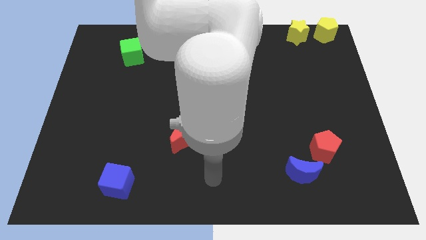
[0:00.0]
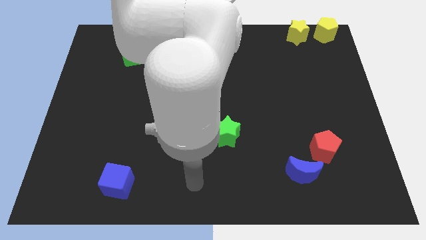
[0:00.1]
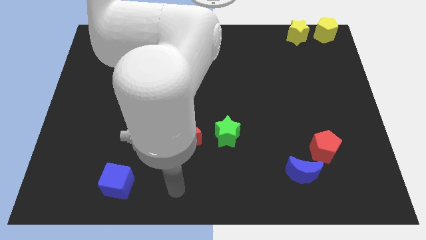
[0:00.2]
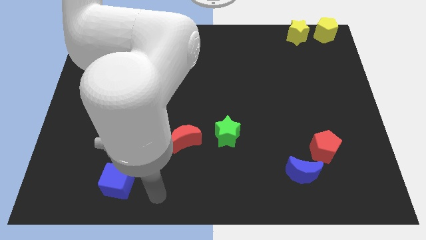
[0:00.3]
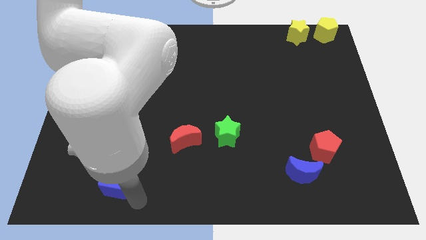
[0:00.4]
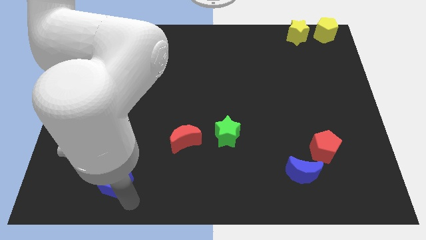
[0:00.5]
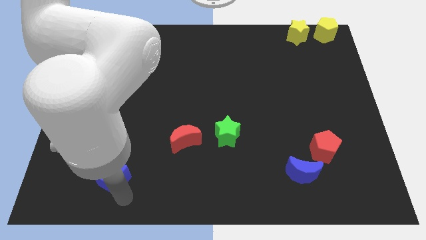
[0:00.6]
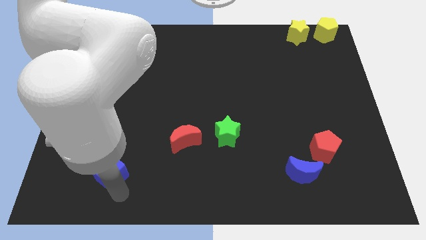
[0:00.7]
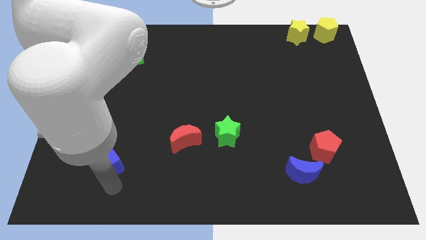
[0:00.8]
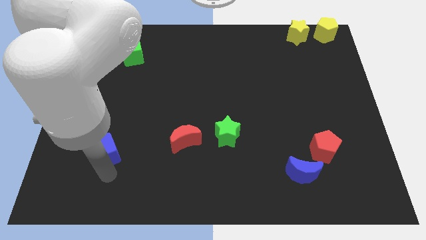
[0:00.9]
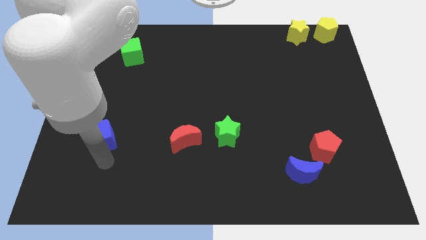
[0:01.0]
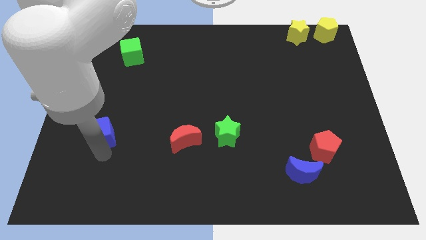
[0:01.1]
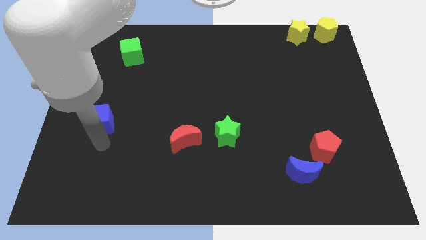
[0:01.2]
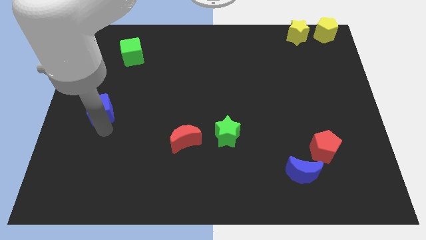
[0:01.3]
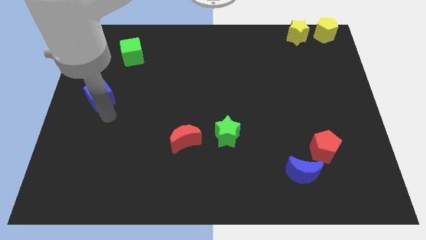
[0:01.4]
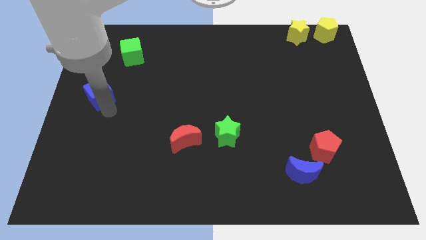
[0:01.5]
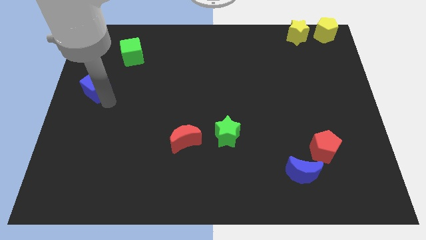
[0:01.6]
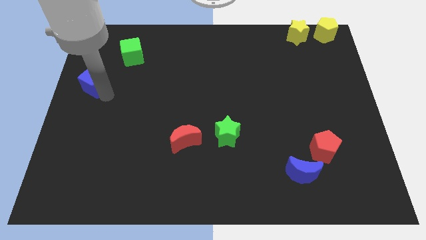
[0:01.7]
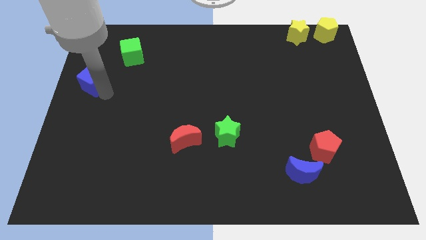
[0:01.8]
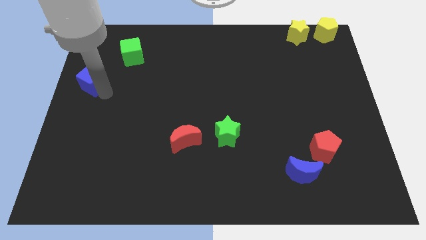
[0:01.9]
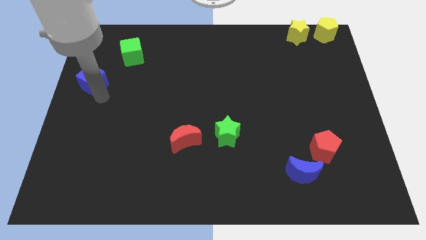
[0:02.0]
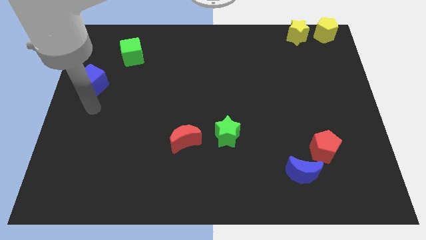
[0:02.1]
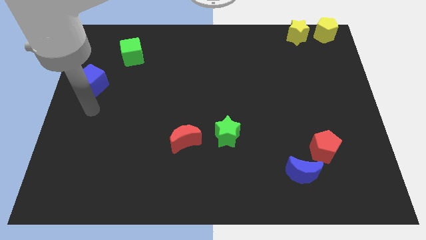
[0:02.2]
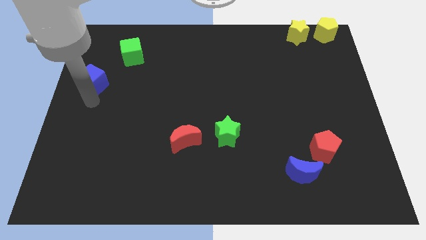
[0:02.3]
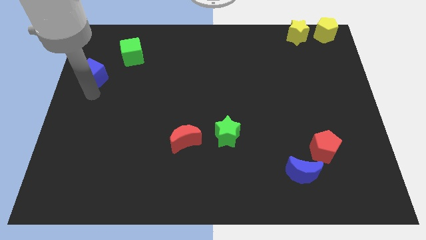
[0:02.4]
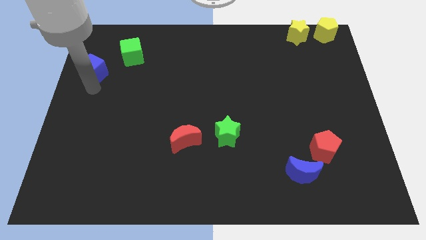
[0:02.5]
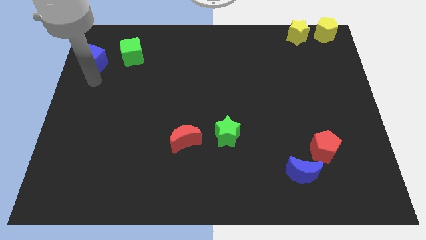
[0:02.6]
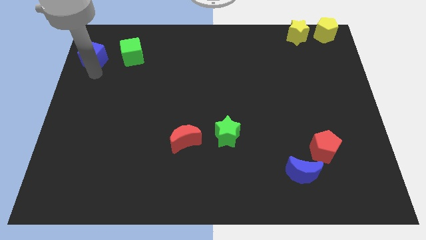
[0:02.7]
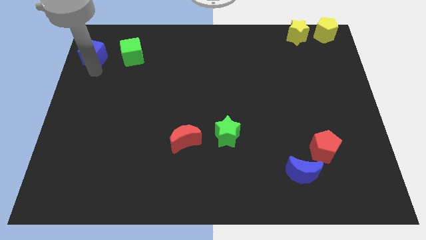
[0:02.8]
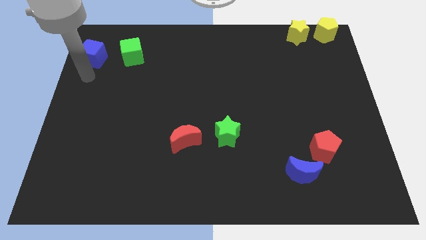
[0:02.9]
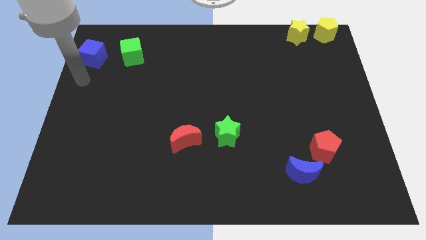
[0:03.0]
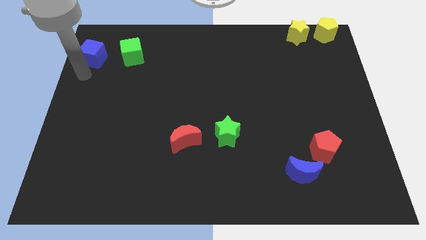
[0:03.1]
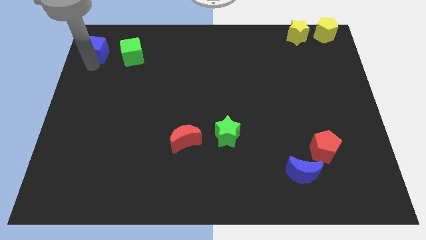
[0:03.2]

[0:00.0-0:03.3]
push the blue cube to the left of the green cube

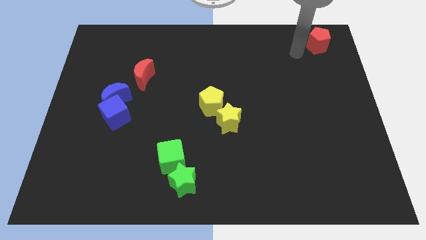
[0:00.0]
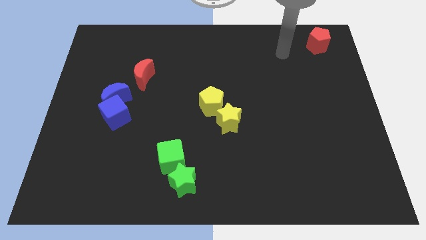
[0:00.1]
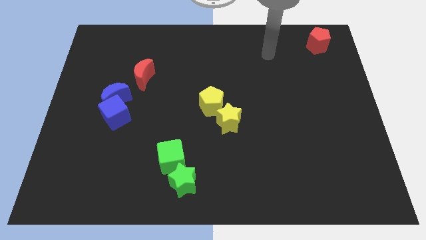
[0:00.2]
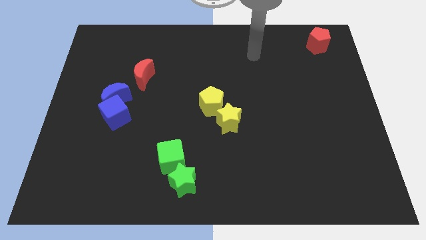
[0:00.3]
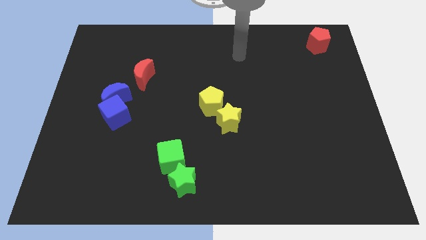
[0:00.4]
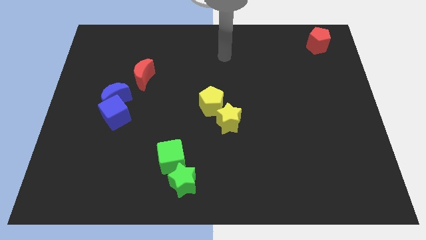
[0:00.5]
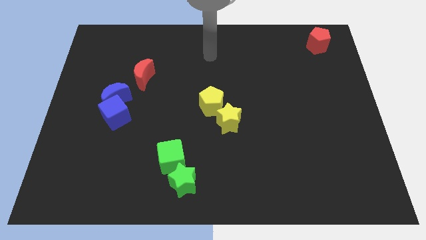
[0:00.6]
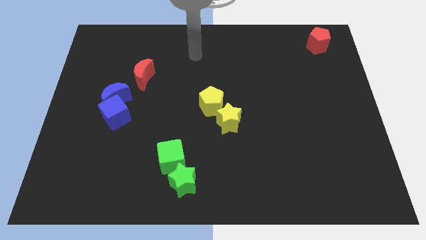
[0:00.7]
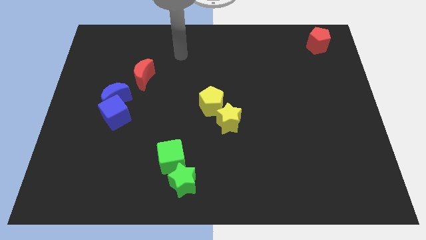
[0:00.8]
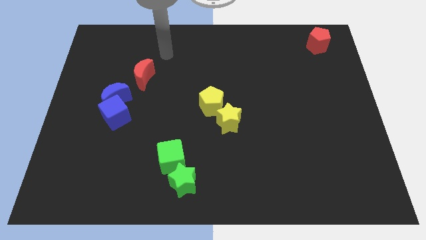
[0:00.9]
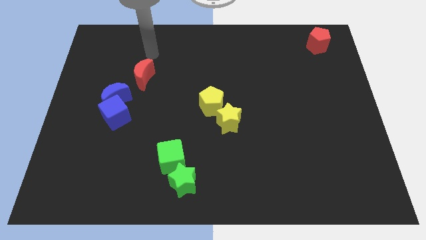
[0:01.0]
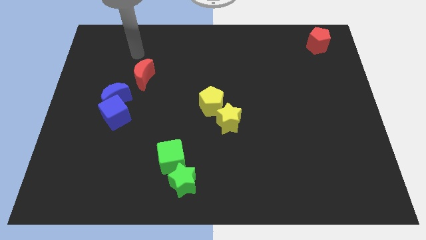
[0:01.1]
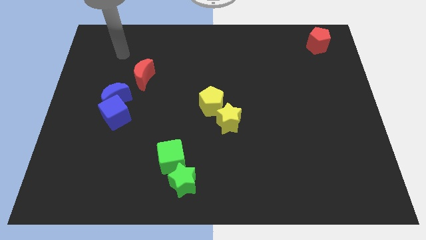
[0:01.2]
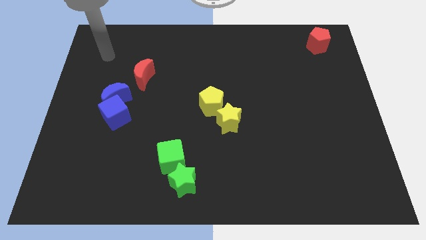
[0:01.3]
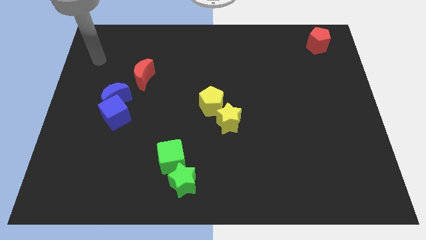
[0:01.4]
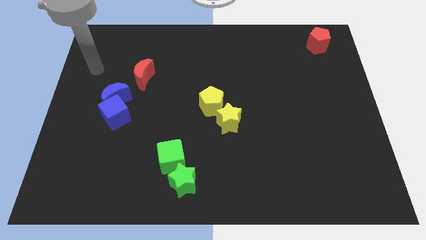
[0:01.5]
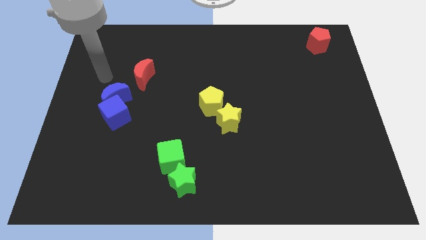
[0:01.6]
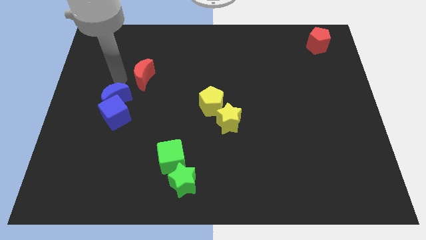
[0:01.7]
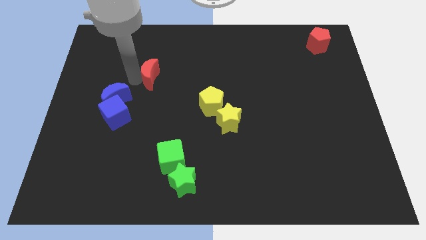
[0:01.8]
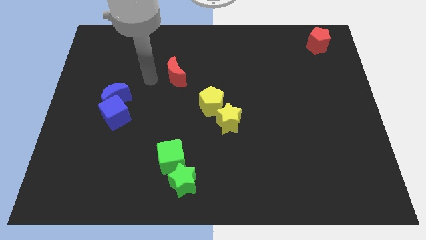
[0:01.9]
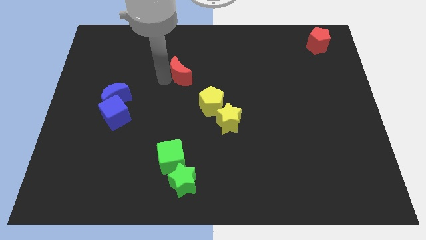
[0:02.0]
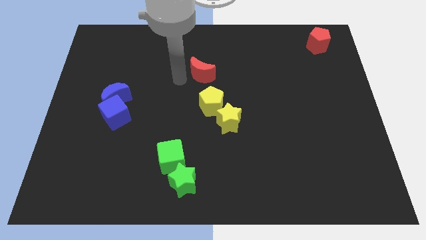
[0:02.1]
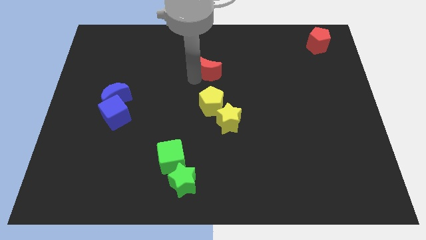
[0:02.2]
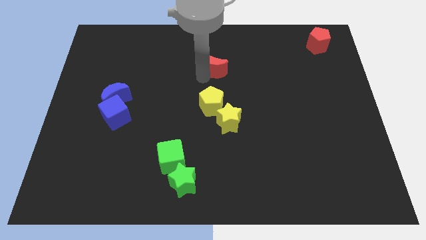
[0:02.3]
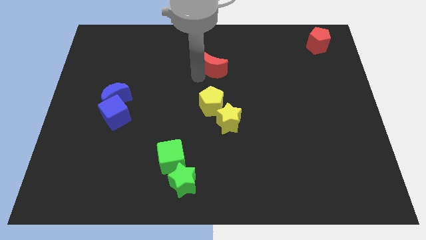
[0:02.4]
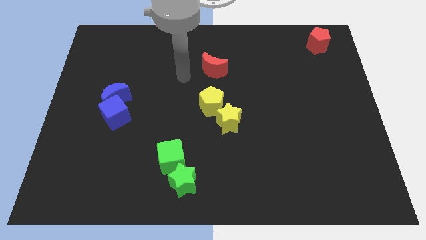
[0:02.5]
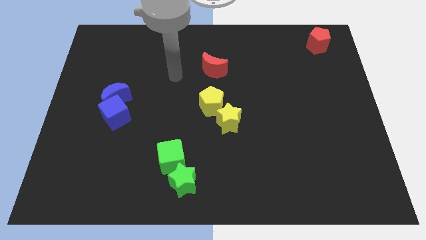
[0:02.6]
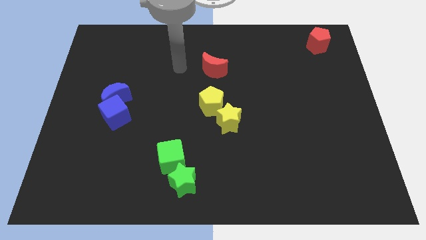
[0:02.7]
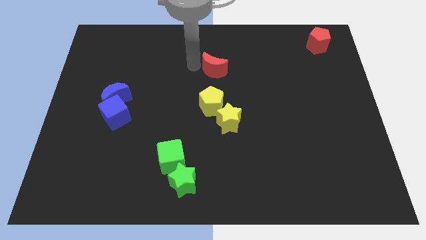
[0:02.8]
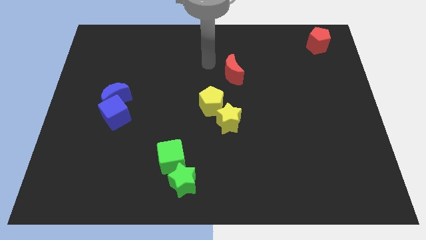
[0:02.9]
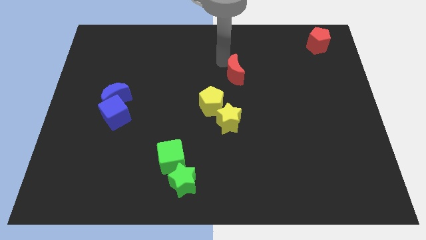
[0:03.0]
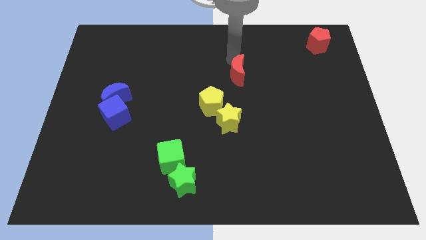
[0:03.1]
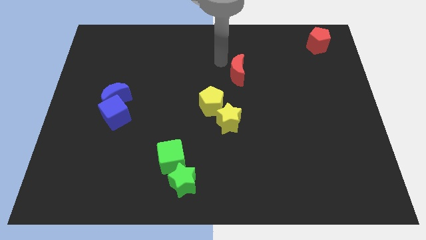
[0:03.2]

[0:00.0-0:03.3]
move the red crescent to the top right of the yellow pentagon

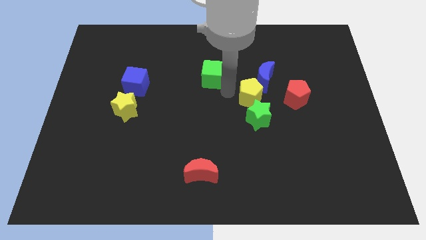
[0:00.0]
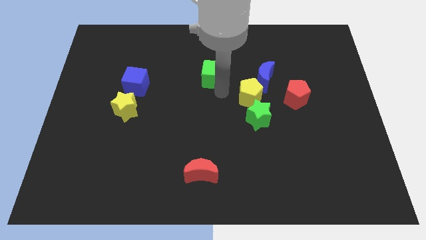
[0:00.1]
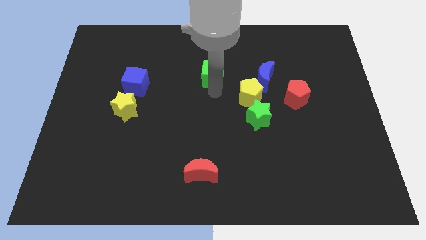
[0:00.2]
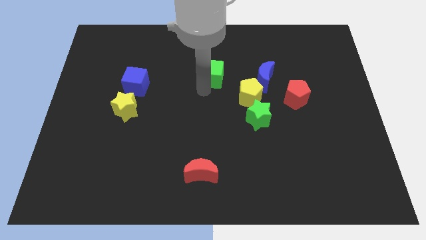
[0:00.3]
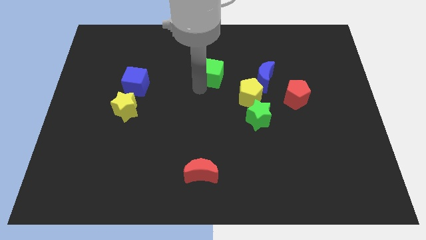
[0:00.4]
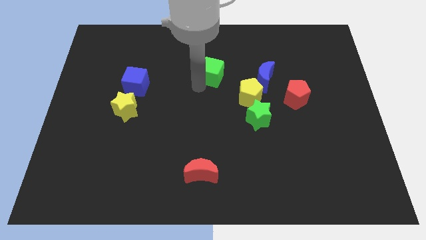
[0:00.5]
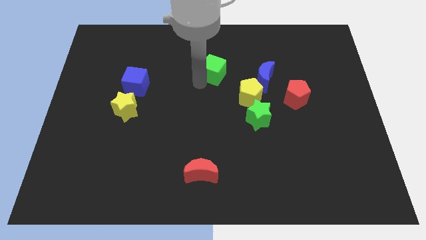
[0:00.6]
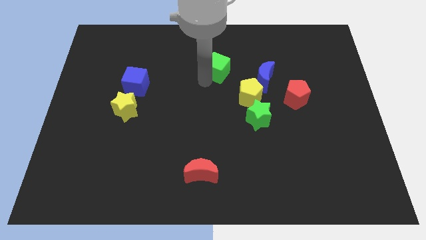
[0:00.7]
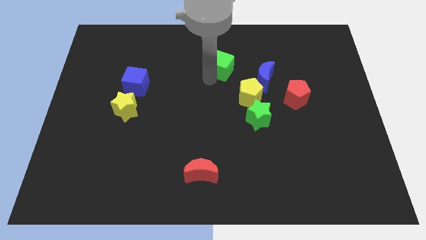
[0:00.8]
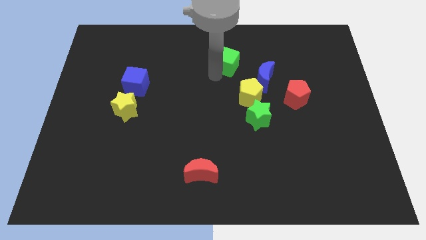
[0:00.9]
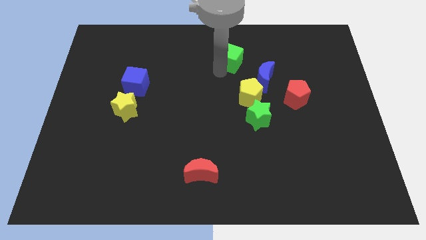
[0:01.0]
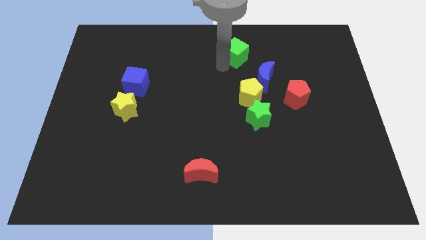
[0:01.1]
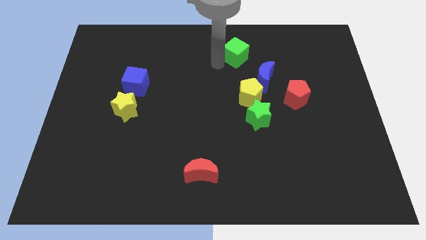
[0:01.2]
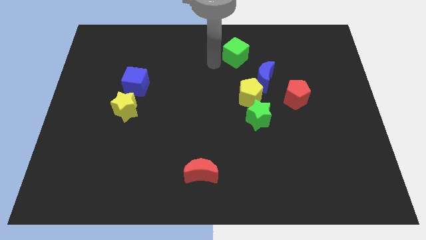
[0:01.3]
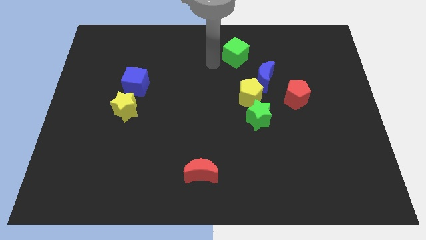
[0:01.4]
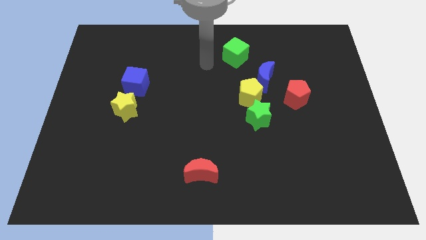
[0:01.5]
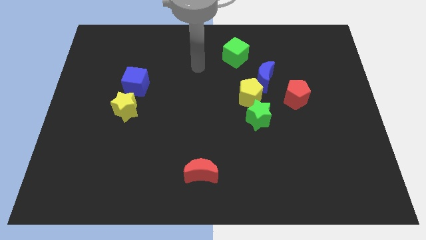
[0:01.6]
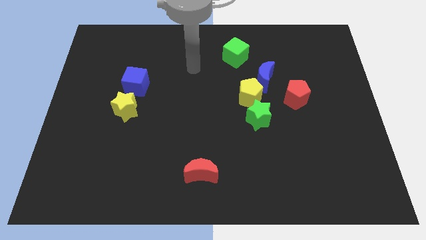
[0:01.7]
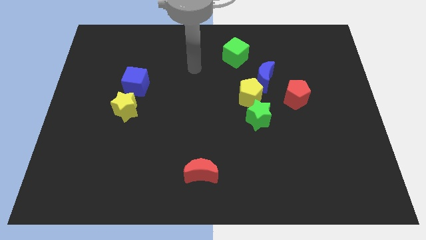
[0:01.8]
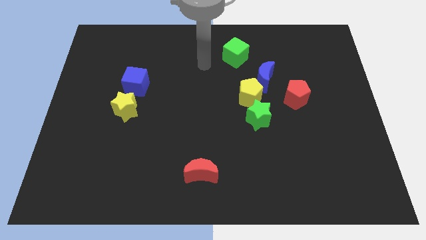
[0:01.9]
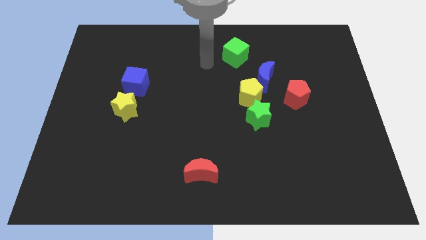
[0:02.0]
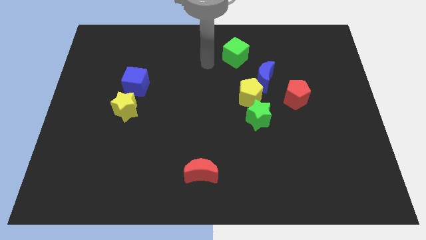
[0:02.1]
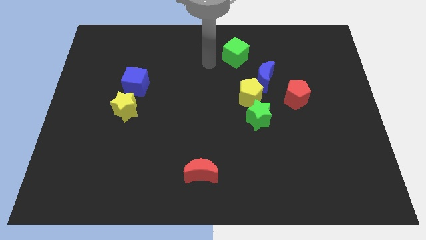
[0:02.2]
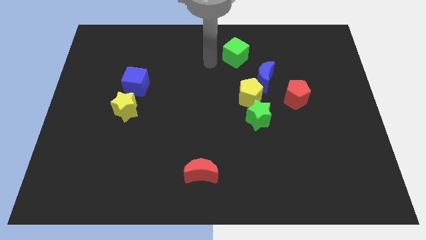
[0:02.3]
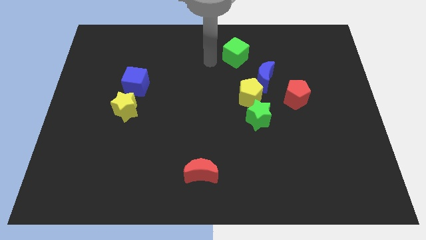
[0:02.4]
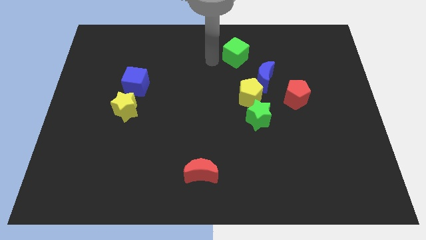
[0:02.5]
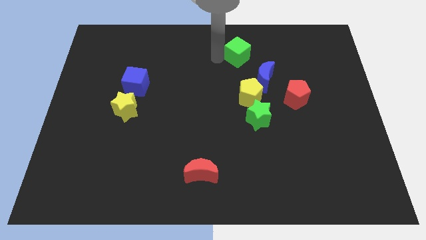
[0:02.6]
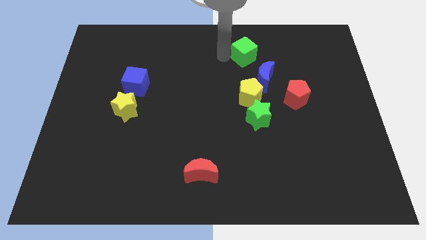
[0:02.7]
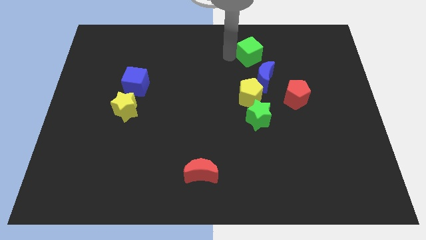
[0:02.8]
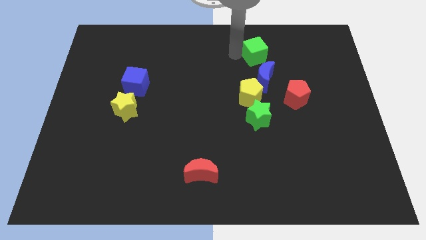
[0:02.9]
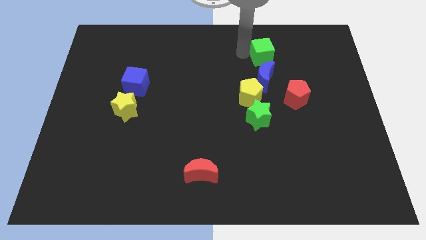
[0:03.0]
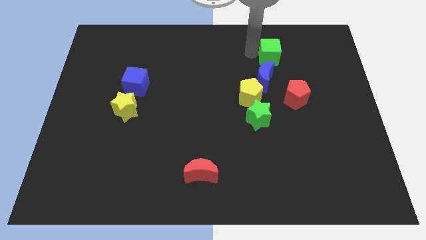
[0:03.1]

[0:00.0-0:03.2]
place green cube on top of blue moon
